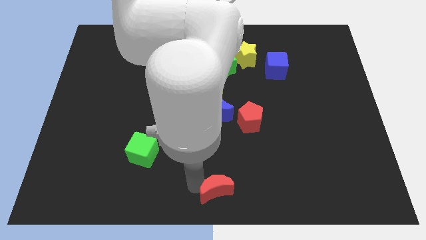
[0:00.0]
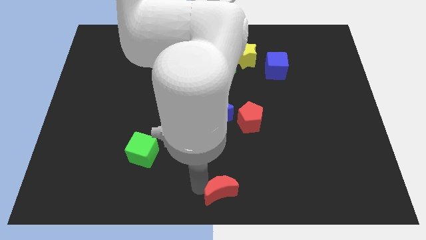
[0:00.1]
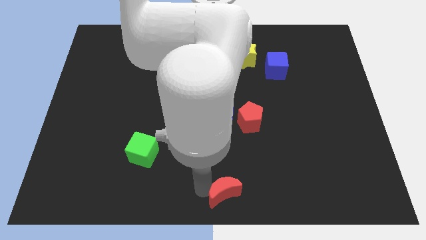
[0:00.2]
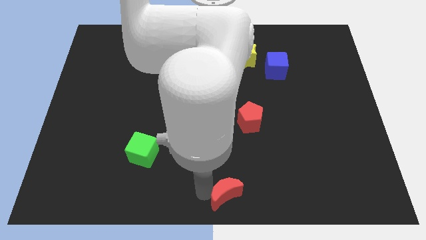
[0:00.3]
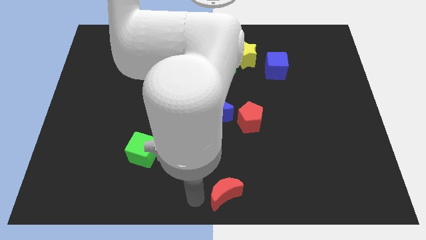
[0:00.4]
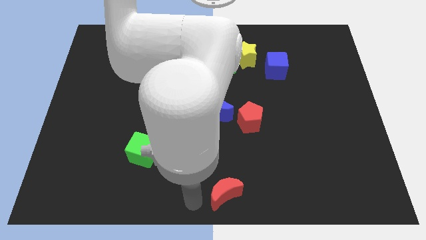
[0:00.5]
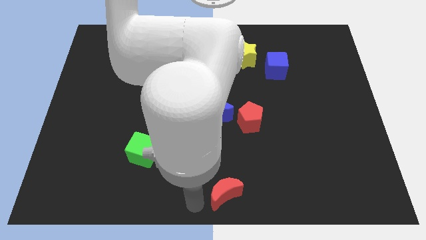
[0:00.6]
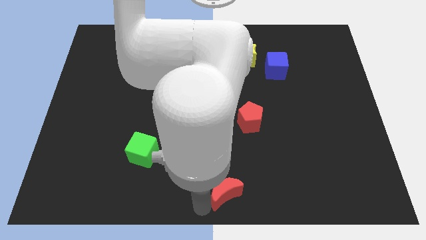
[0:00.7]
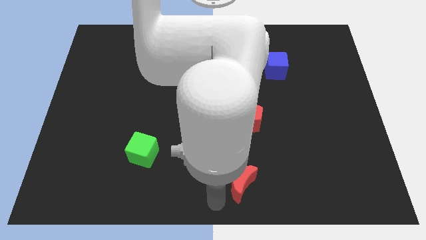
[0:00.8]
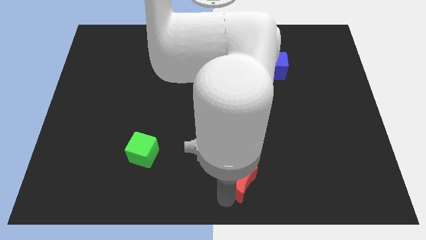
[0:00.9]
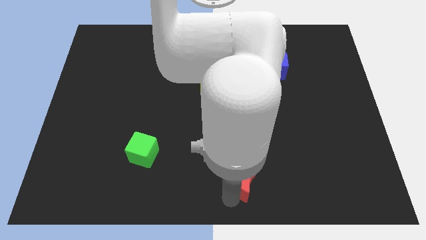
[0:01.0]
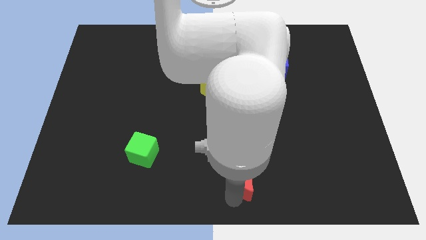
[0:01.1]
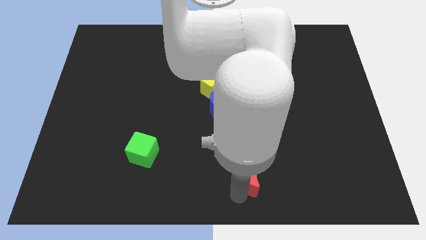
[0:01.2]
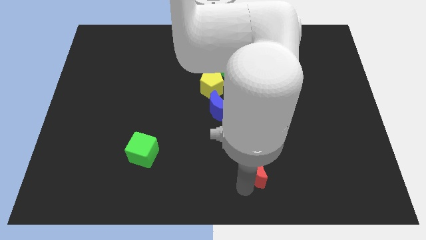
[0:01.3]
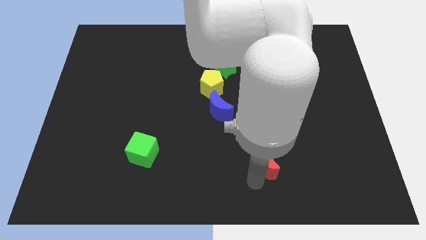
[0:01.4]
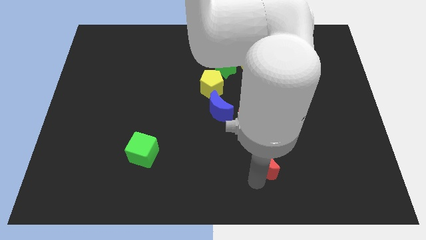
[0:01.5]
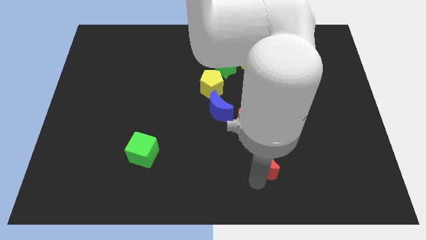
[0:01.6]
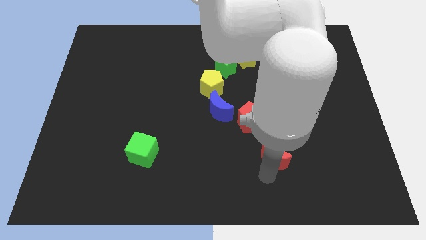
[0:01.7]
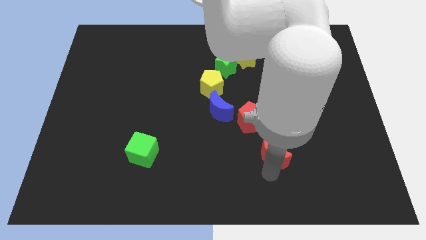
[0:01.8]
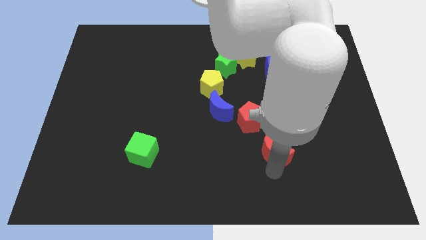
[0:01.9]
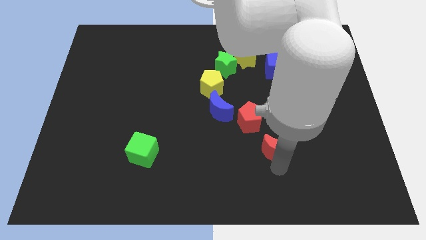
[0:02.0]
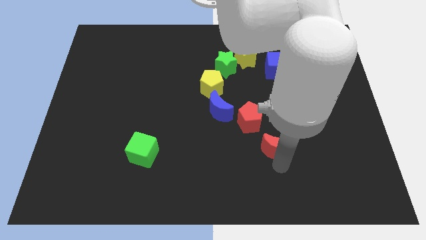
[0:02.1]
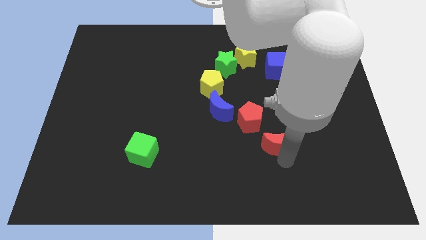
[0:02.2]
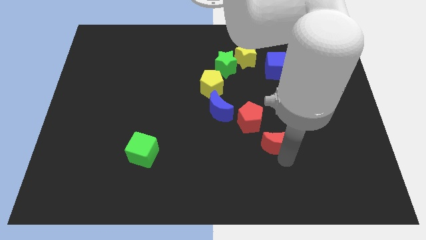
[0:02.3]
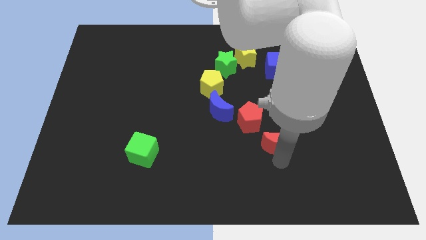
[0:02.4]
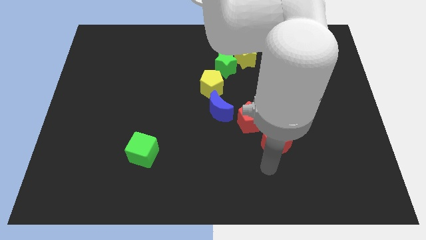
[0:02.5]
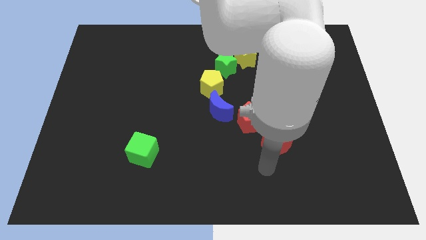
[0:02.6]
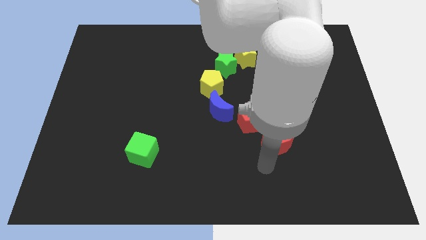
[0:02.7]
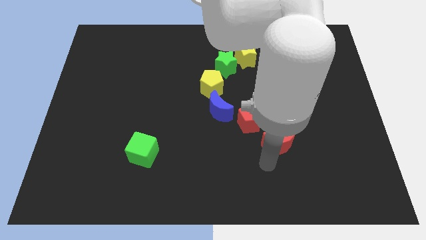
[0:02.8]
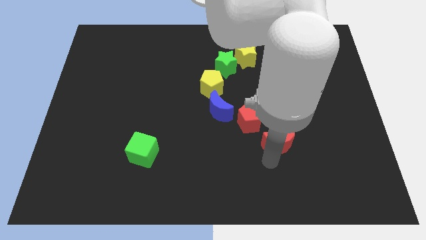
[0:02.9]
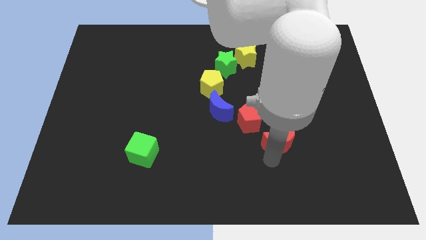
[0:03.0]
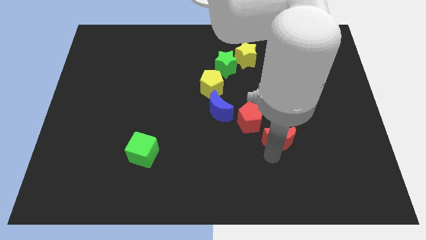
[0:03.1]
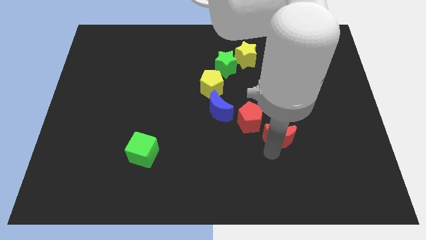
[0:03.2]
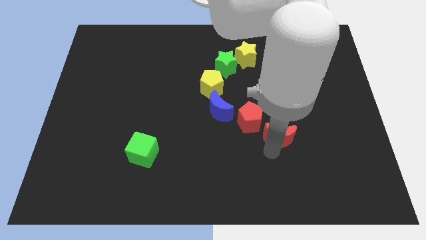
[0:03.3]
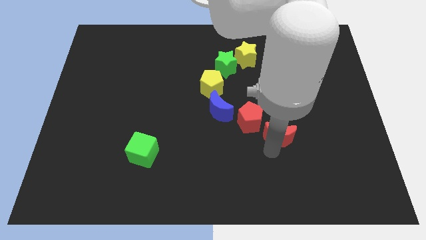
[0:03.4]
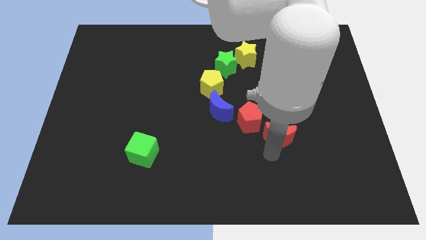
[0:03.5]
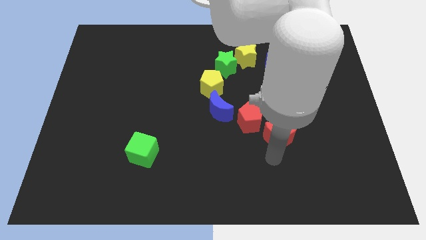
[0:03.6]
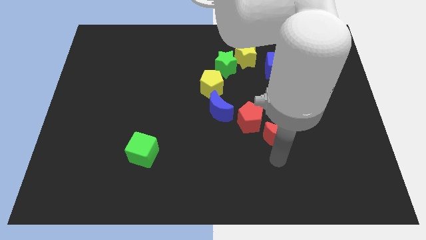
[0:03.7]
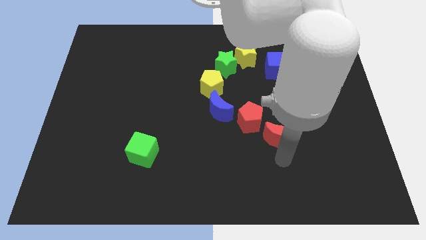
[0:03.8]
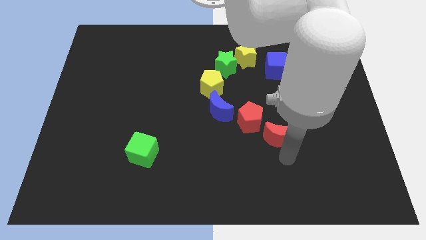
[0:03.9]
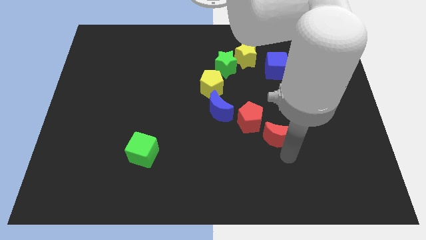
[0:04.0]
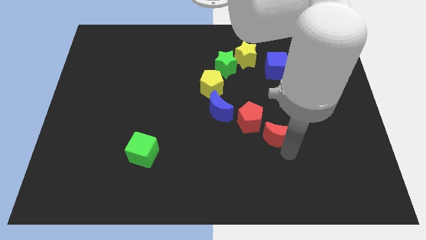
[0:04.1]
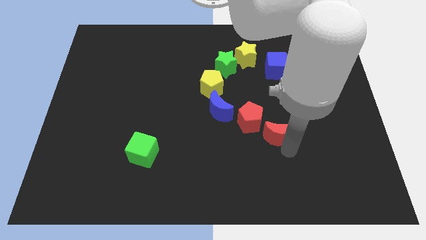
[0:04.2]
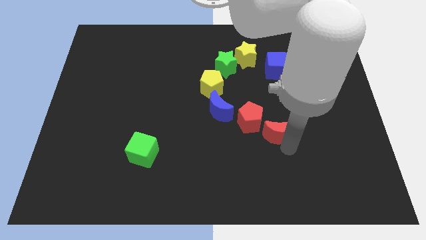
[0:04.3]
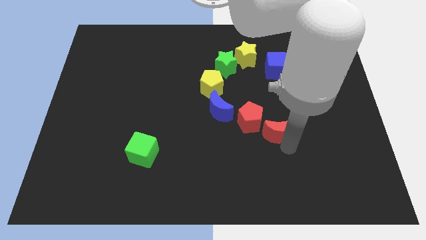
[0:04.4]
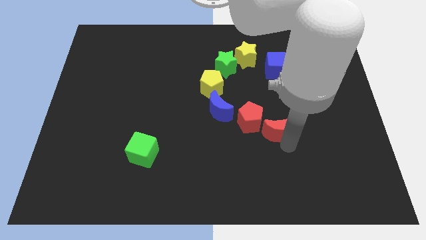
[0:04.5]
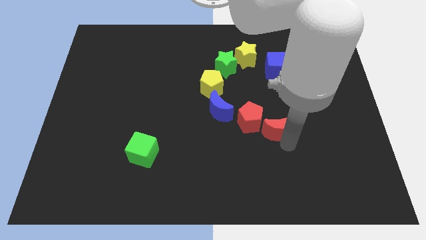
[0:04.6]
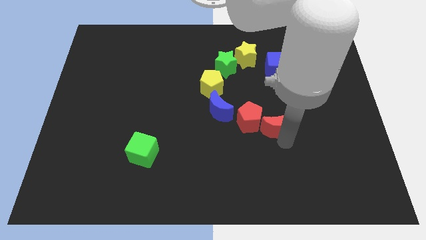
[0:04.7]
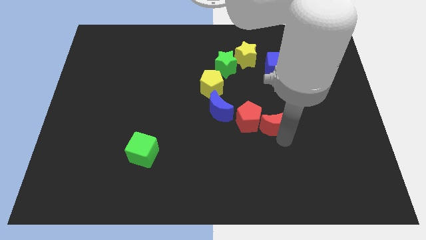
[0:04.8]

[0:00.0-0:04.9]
move red moon right beside the red pentagon

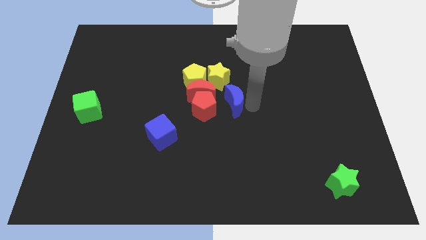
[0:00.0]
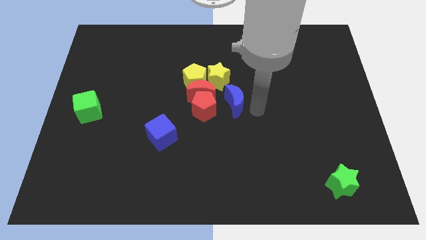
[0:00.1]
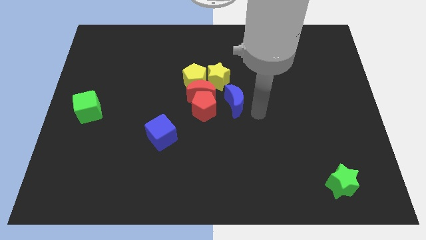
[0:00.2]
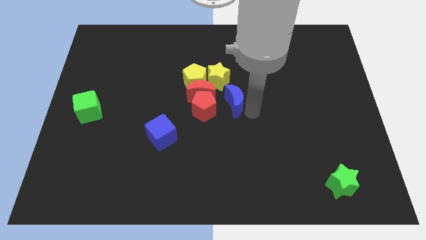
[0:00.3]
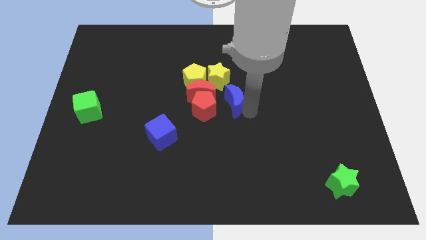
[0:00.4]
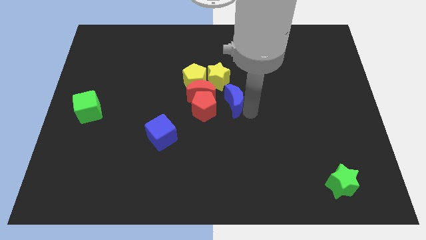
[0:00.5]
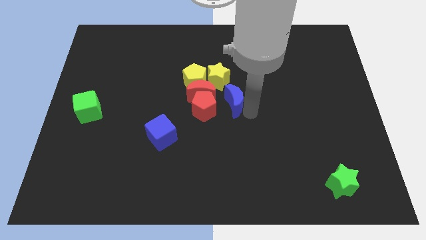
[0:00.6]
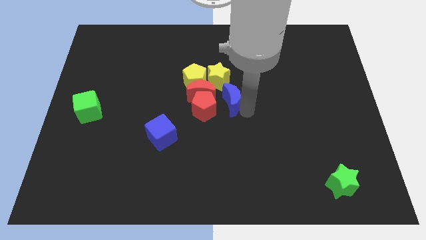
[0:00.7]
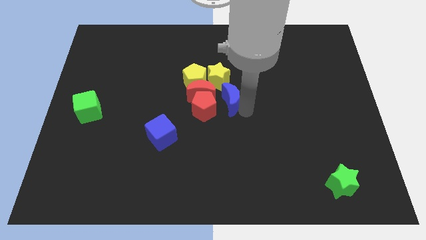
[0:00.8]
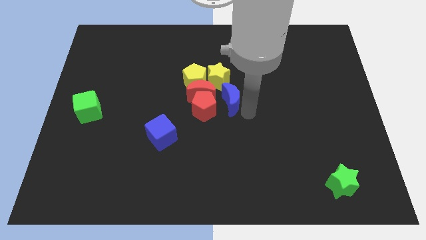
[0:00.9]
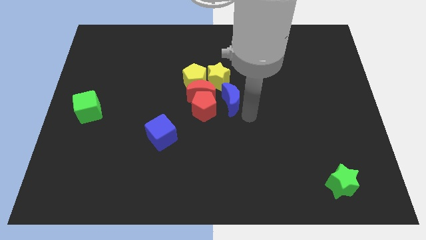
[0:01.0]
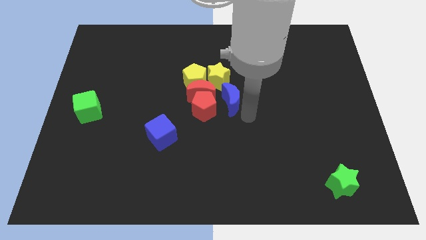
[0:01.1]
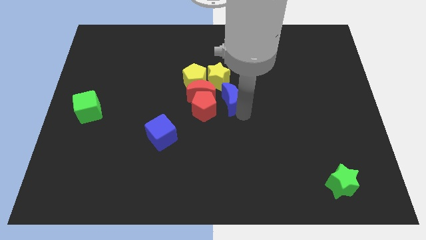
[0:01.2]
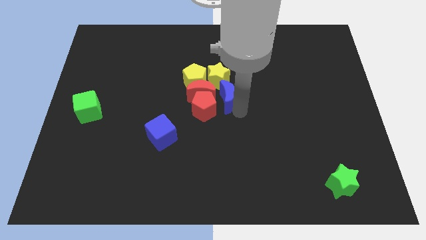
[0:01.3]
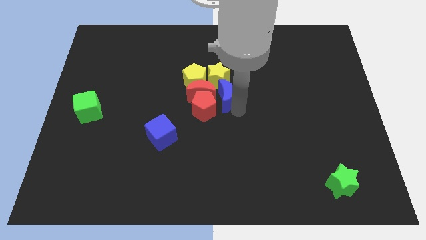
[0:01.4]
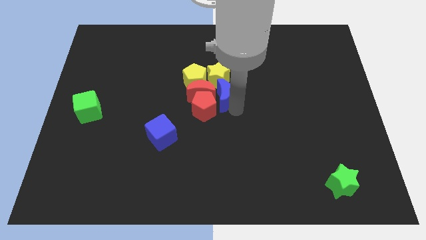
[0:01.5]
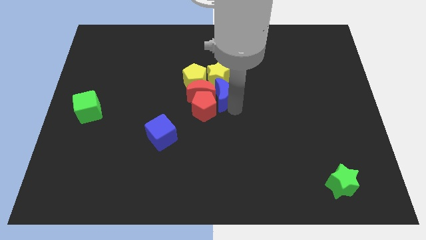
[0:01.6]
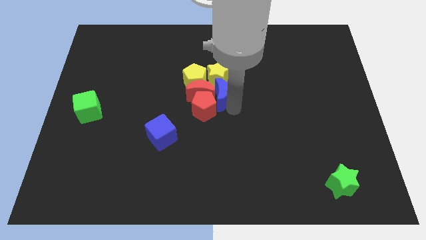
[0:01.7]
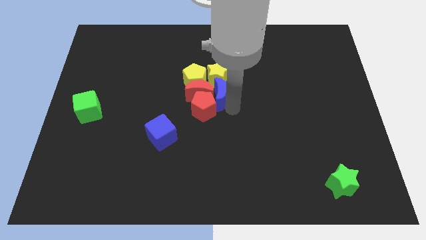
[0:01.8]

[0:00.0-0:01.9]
push the blue crescent towards the red and yellow blocks

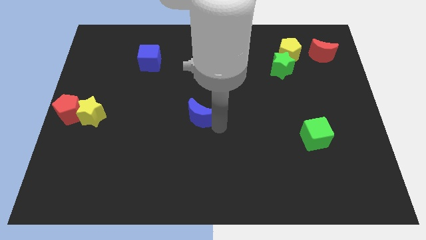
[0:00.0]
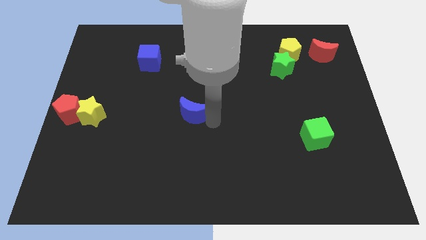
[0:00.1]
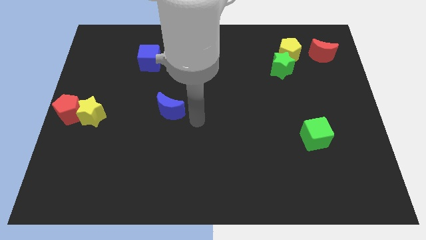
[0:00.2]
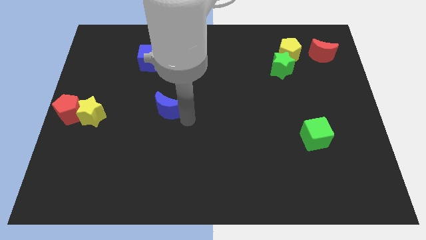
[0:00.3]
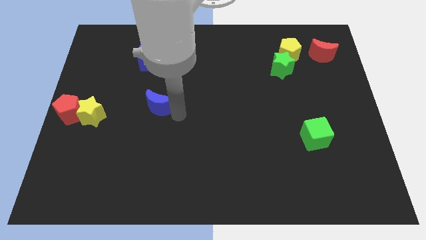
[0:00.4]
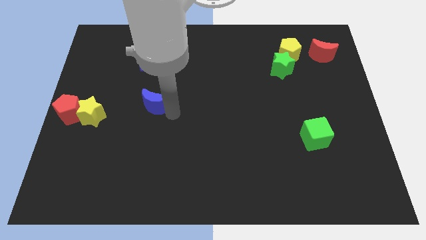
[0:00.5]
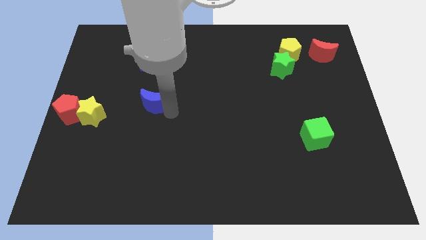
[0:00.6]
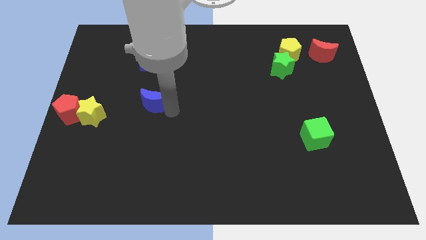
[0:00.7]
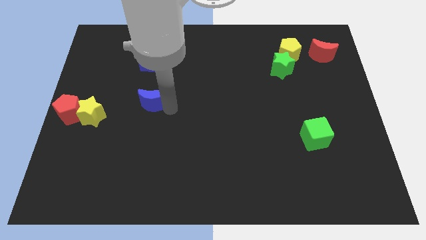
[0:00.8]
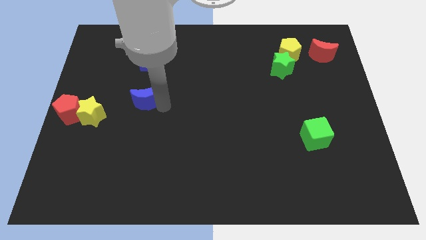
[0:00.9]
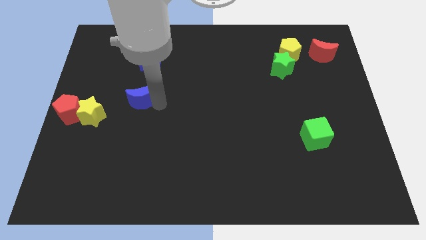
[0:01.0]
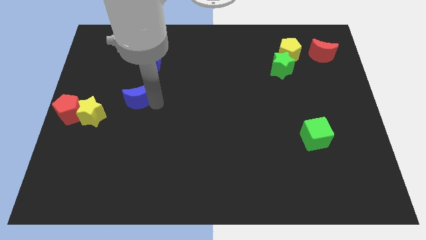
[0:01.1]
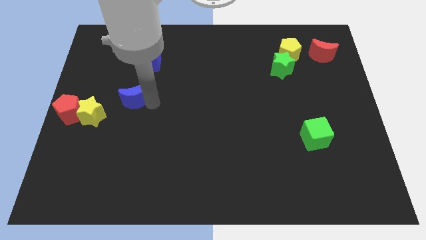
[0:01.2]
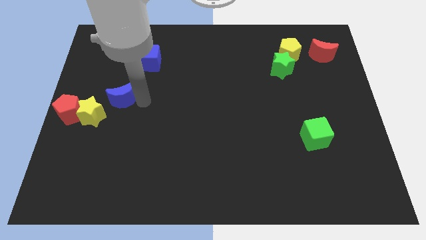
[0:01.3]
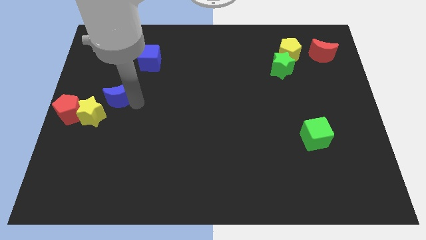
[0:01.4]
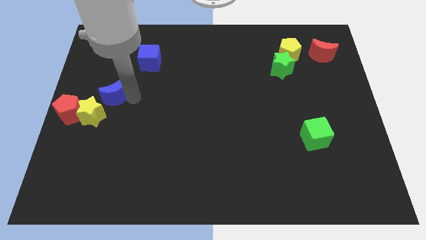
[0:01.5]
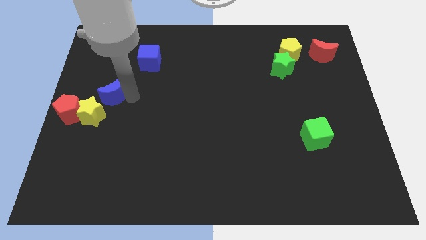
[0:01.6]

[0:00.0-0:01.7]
place blue moon to the top right of yellow star

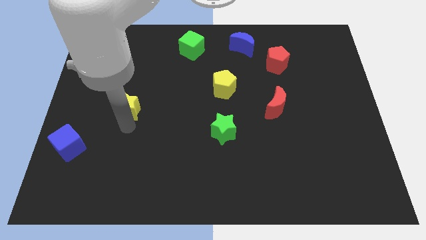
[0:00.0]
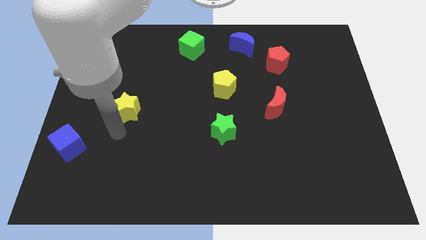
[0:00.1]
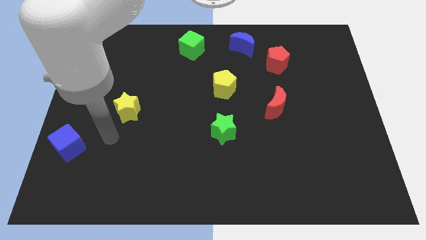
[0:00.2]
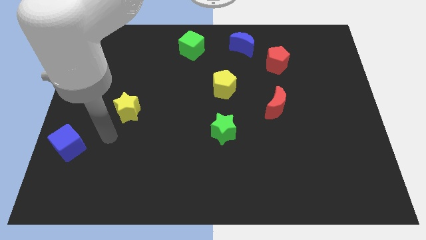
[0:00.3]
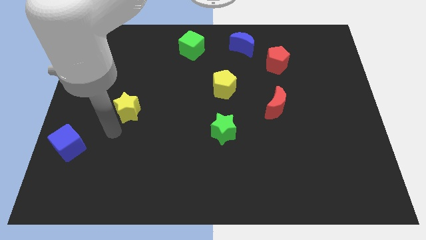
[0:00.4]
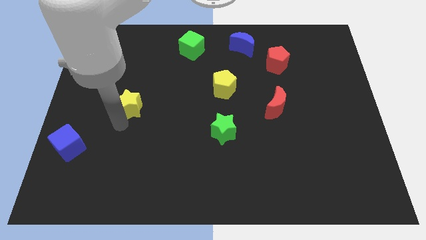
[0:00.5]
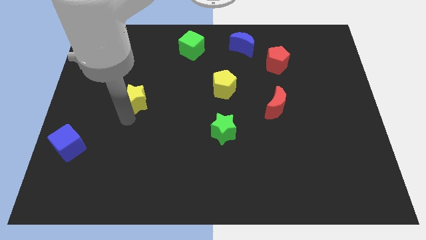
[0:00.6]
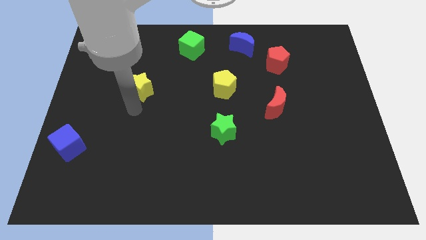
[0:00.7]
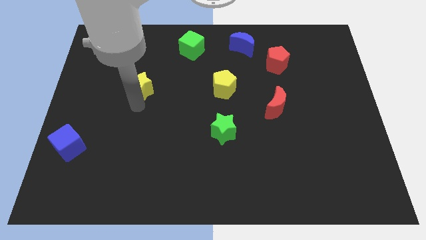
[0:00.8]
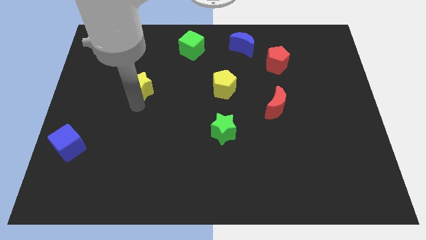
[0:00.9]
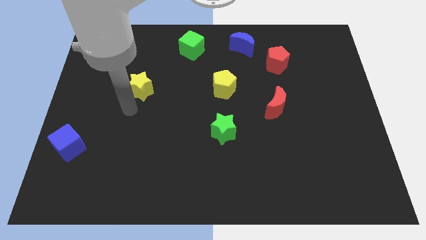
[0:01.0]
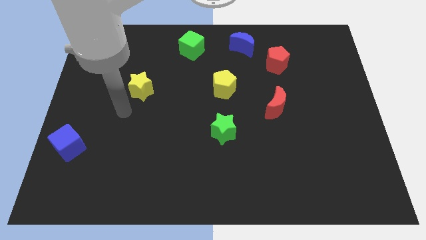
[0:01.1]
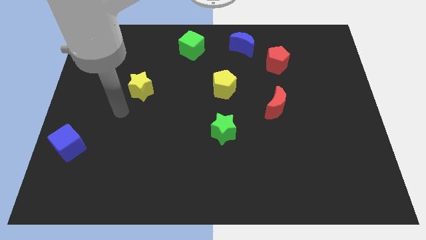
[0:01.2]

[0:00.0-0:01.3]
slide the yellow star to the left of the yellow pentagon
